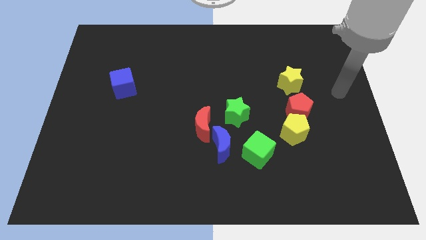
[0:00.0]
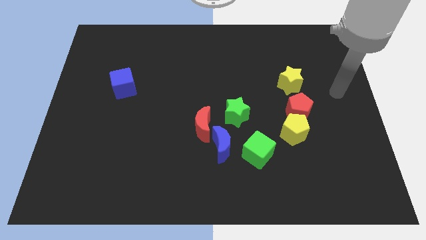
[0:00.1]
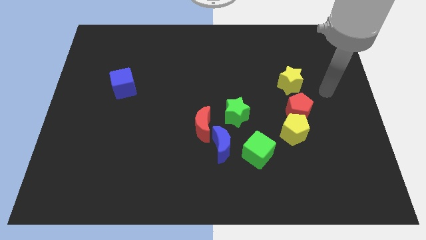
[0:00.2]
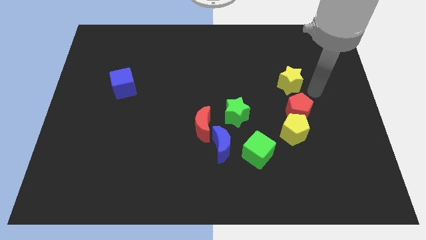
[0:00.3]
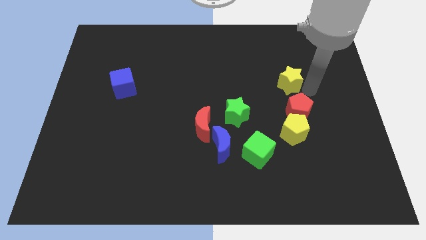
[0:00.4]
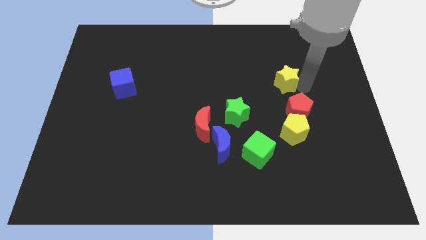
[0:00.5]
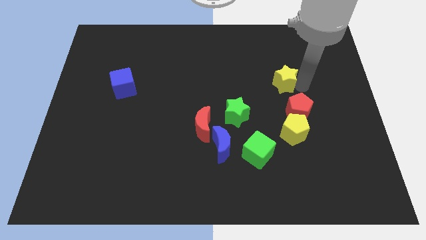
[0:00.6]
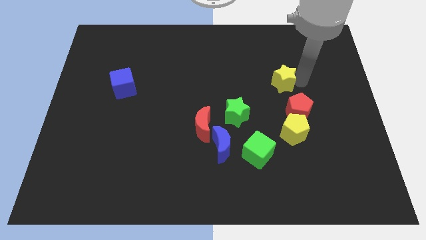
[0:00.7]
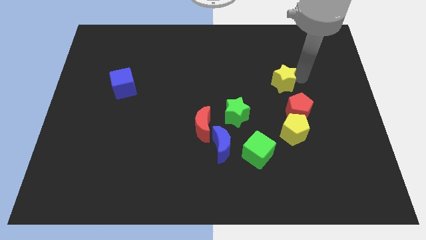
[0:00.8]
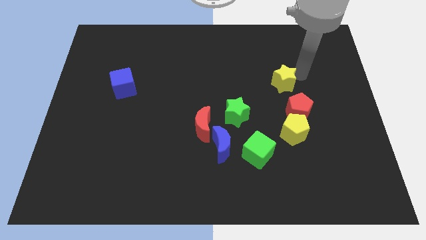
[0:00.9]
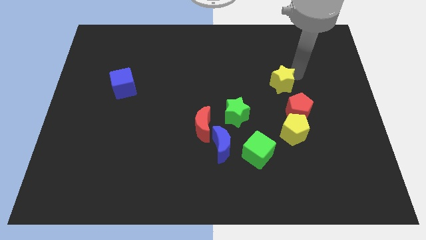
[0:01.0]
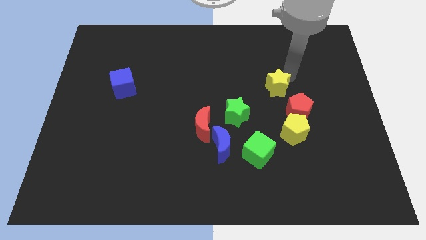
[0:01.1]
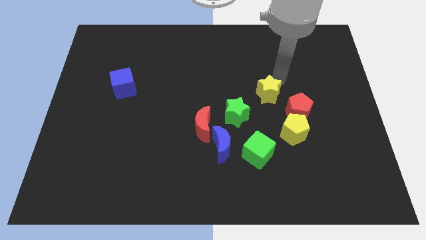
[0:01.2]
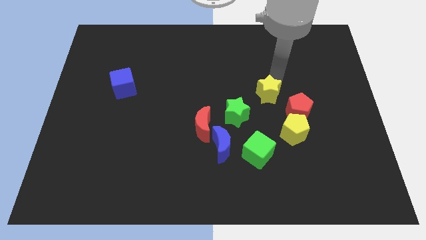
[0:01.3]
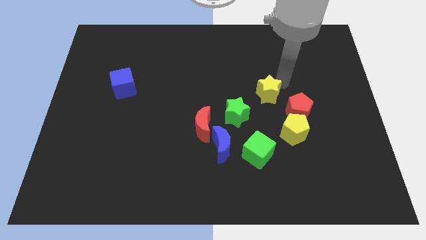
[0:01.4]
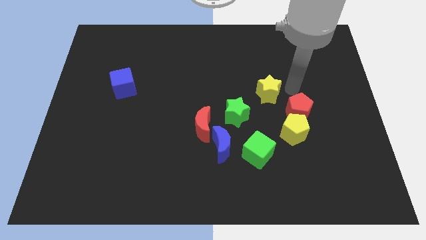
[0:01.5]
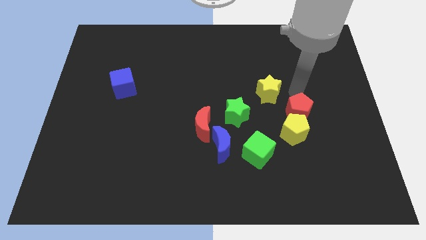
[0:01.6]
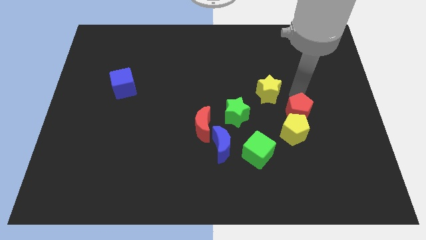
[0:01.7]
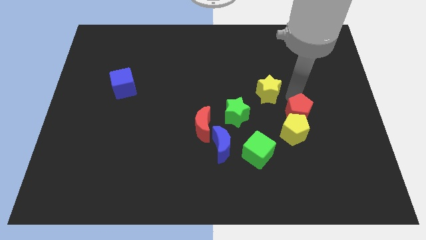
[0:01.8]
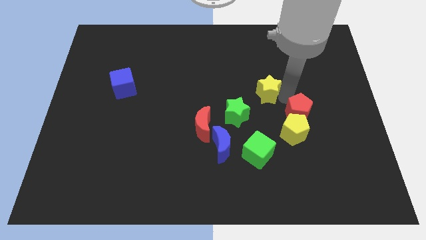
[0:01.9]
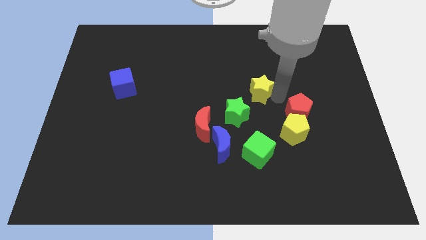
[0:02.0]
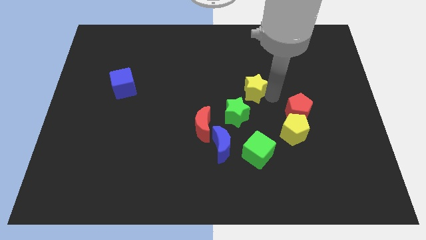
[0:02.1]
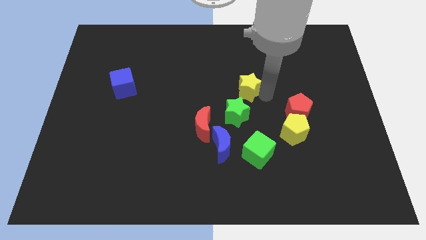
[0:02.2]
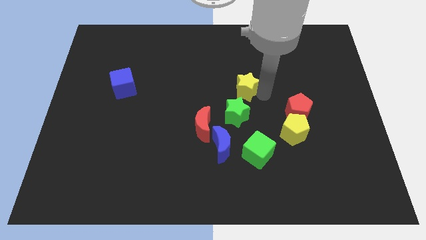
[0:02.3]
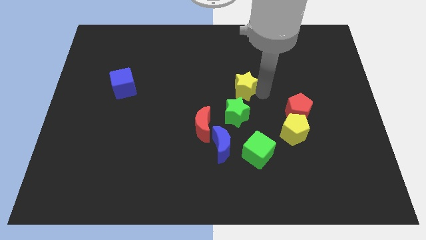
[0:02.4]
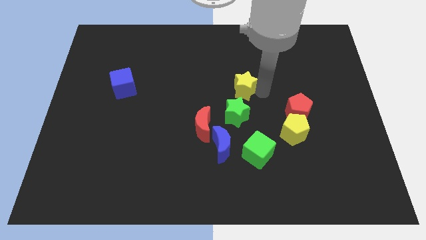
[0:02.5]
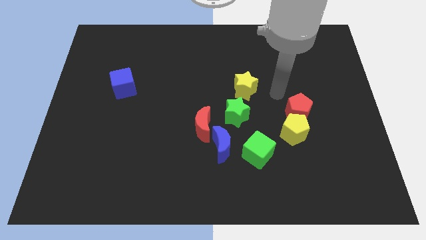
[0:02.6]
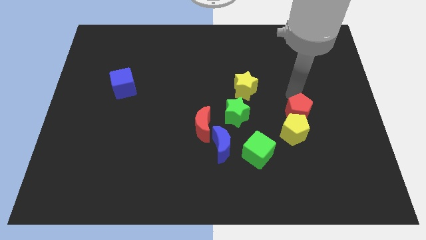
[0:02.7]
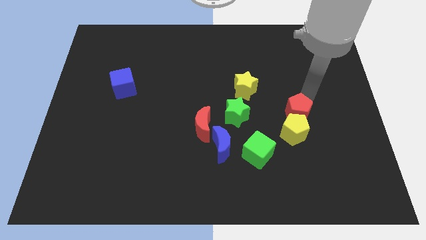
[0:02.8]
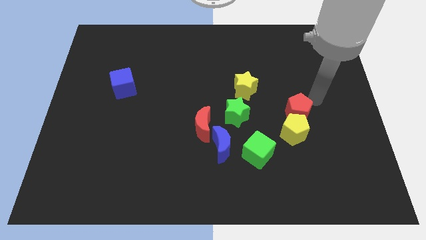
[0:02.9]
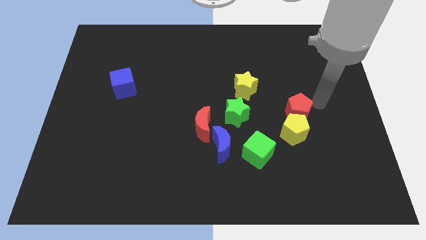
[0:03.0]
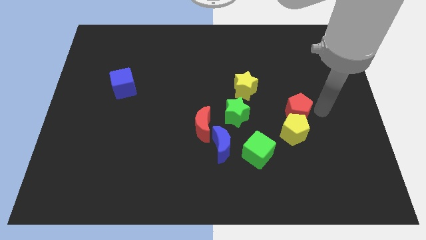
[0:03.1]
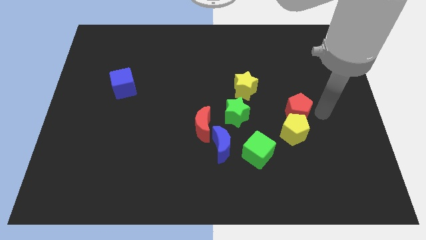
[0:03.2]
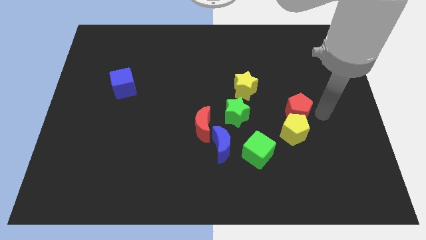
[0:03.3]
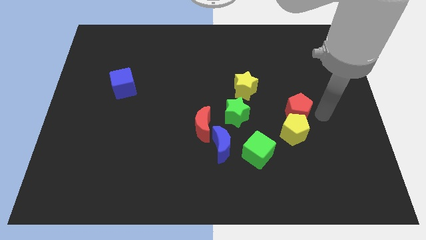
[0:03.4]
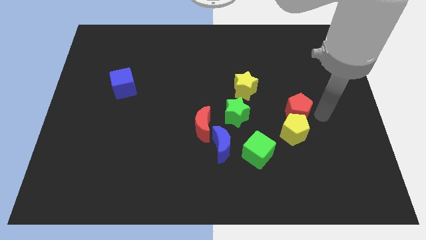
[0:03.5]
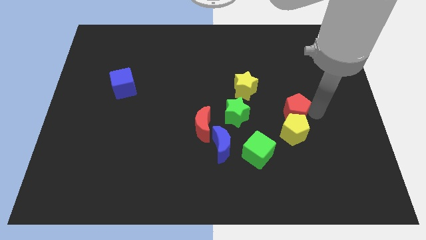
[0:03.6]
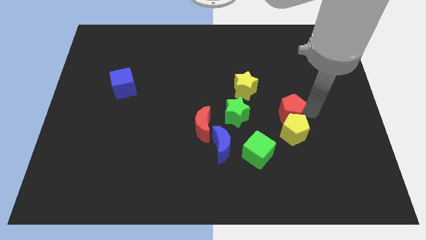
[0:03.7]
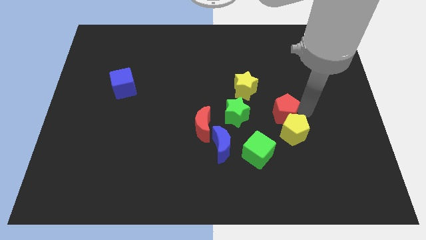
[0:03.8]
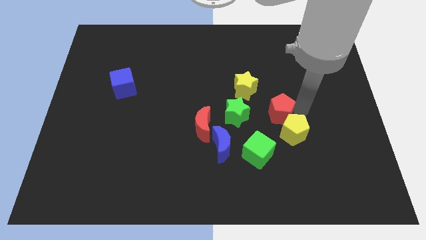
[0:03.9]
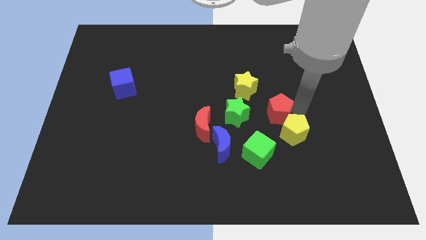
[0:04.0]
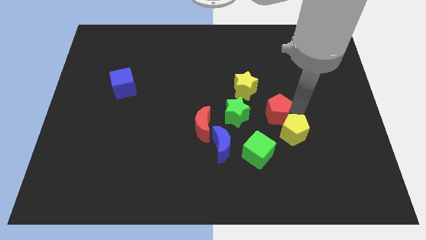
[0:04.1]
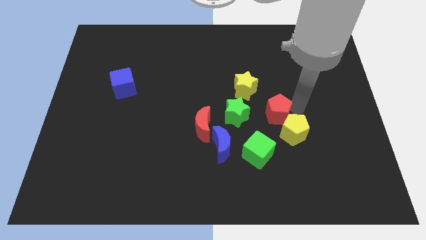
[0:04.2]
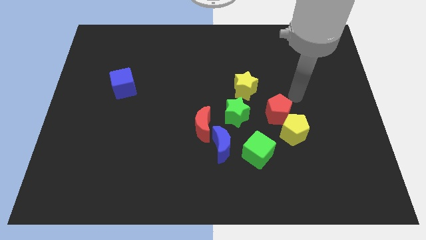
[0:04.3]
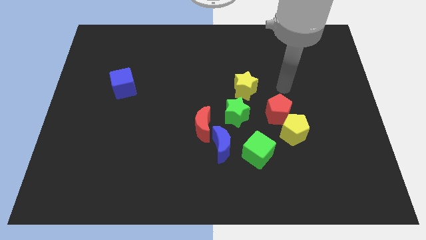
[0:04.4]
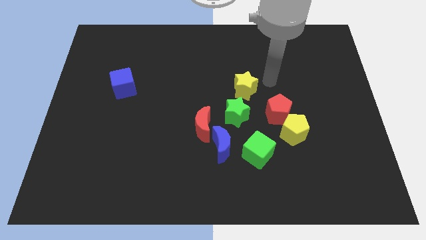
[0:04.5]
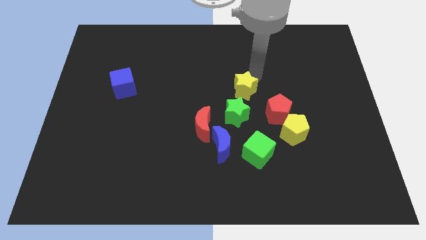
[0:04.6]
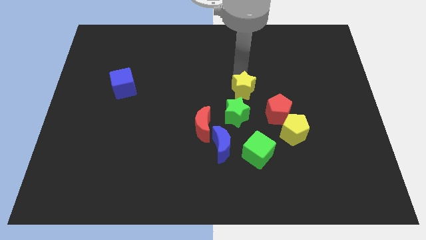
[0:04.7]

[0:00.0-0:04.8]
slightly move the red pentagon to the left of the board

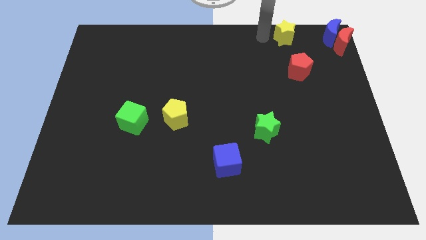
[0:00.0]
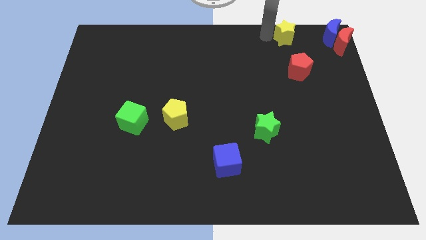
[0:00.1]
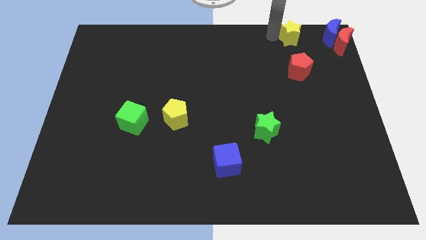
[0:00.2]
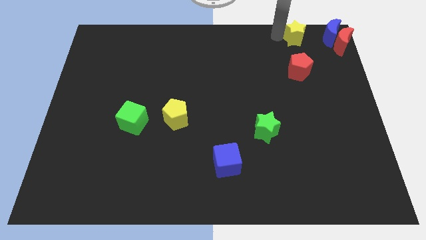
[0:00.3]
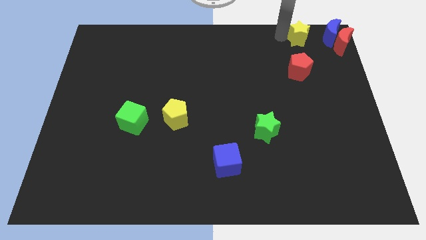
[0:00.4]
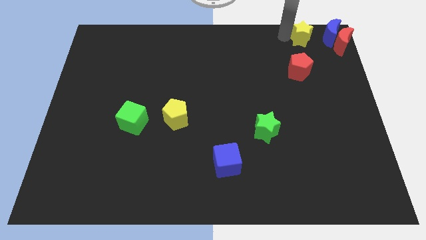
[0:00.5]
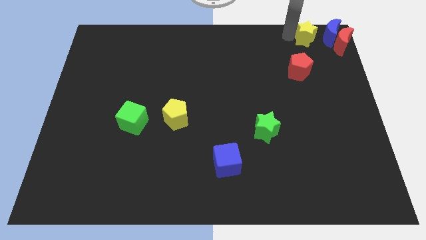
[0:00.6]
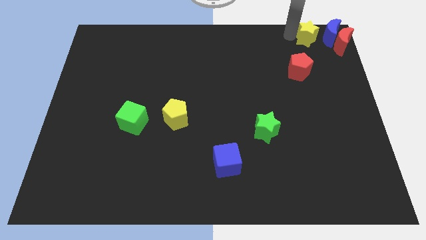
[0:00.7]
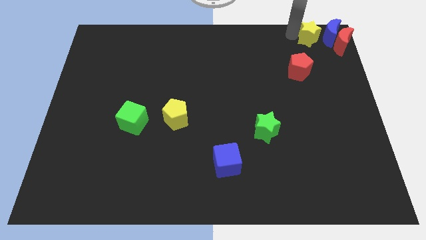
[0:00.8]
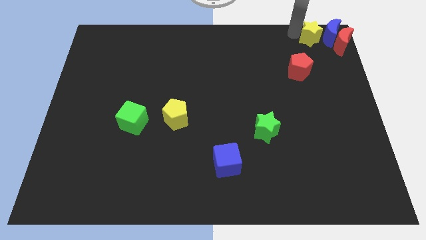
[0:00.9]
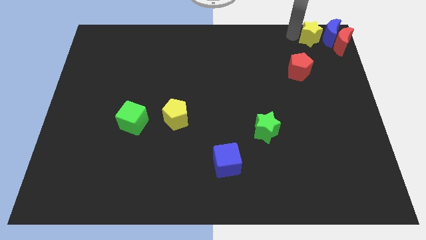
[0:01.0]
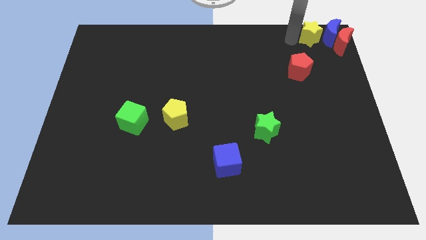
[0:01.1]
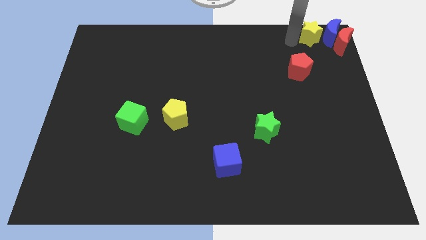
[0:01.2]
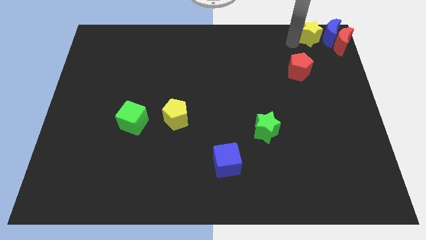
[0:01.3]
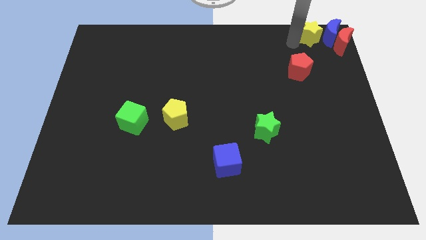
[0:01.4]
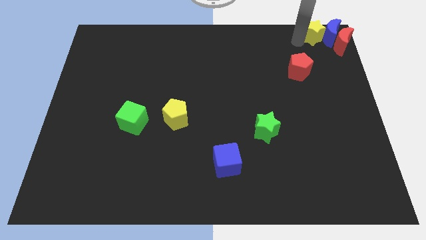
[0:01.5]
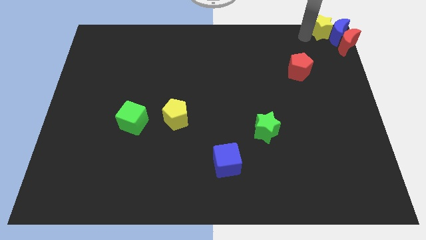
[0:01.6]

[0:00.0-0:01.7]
move yellow star into left of blue moon

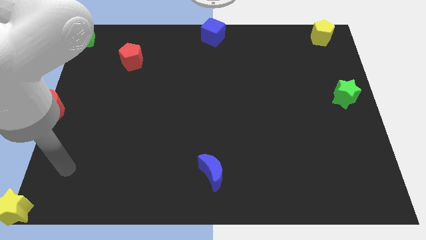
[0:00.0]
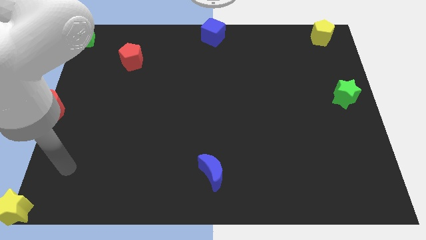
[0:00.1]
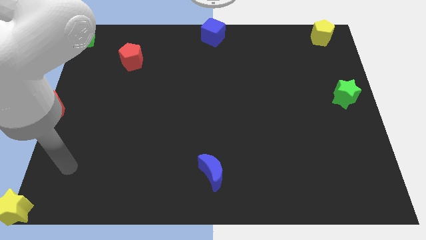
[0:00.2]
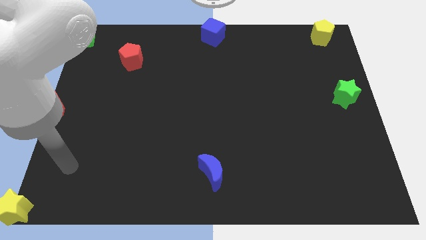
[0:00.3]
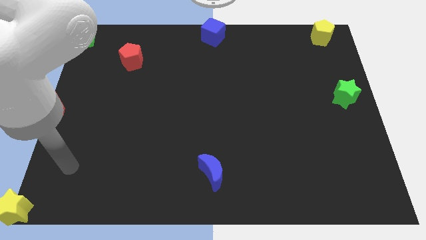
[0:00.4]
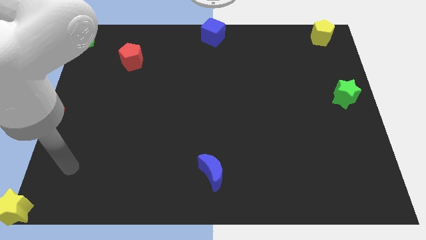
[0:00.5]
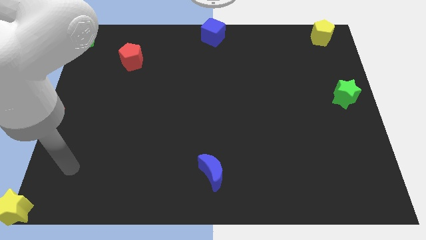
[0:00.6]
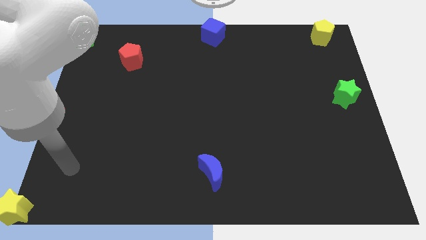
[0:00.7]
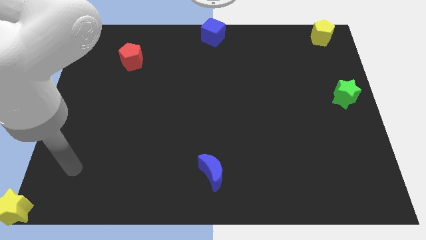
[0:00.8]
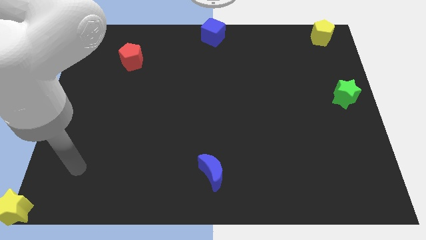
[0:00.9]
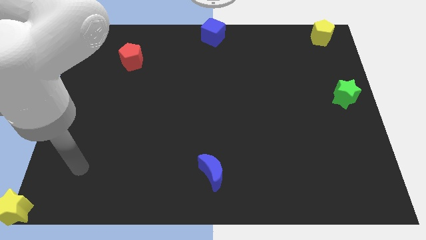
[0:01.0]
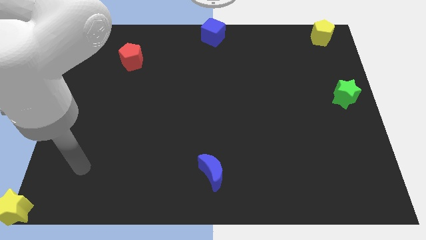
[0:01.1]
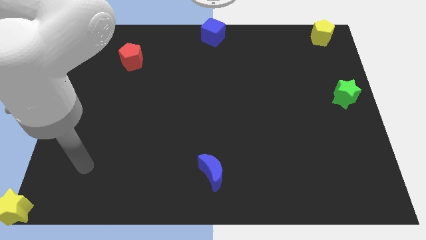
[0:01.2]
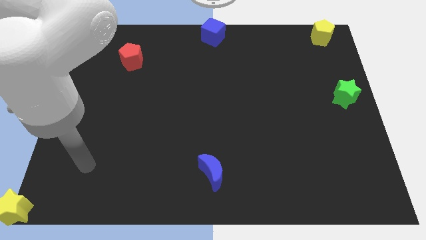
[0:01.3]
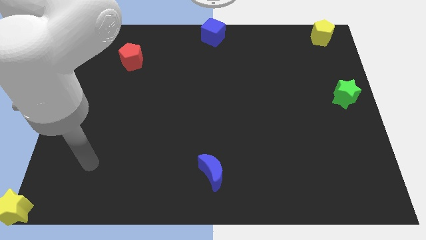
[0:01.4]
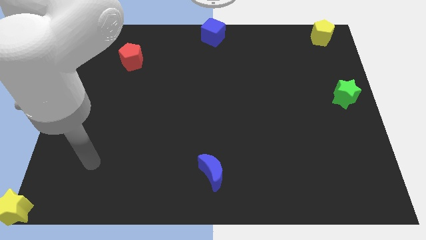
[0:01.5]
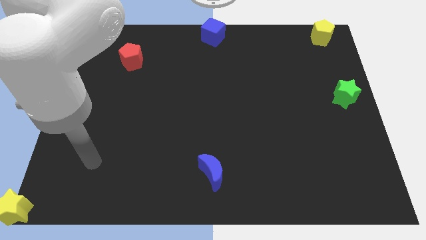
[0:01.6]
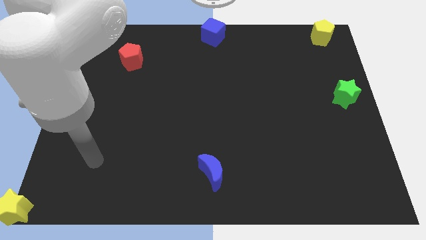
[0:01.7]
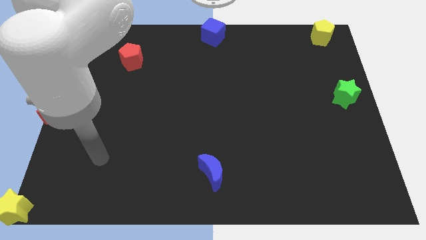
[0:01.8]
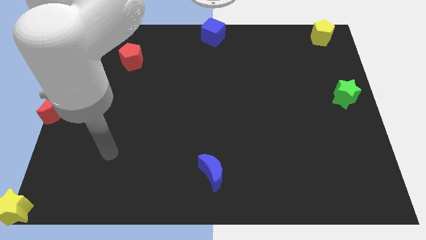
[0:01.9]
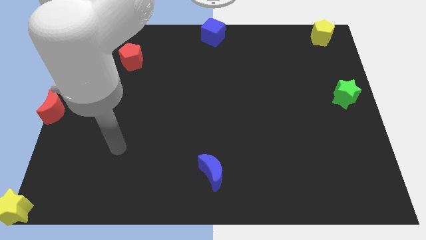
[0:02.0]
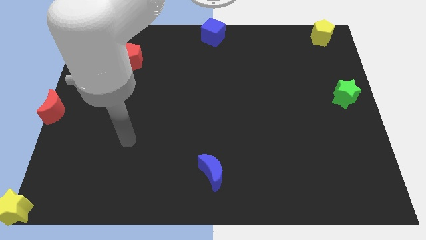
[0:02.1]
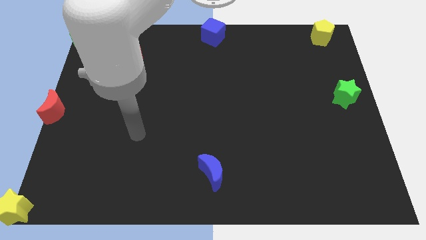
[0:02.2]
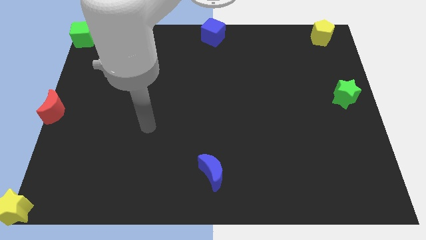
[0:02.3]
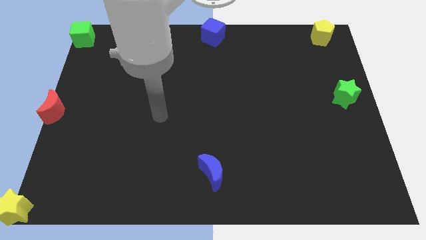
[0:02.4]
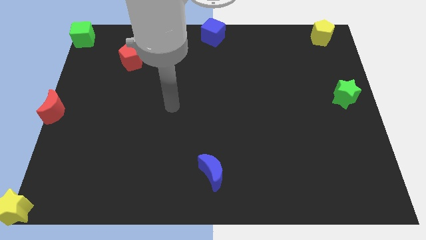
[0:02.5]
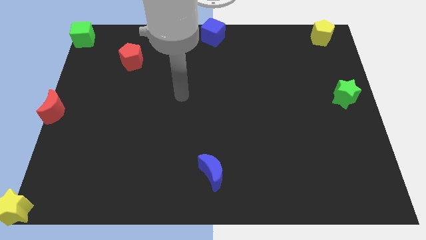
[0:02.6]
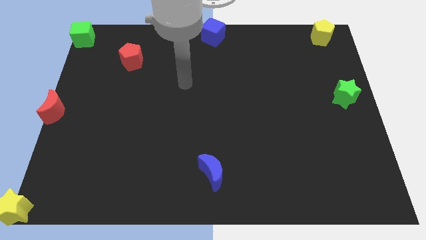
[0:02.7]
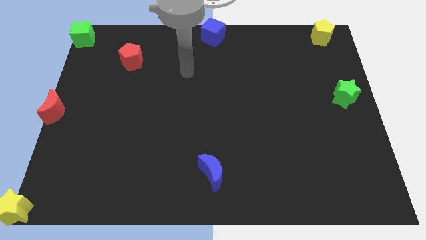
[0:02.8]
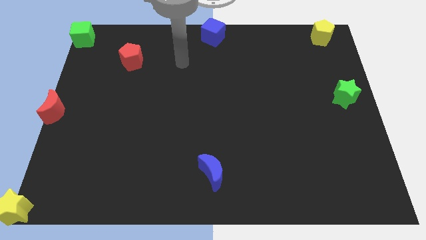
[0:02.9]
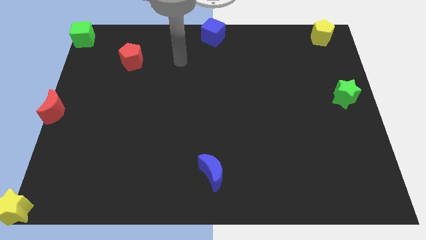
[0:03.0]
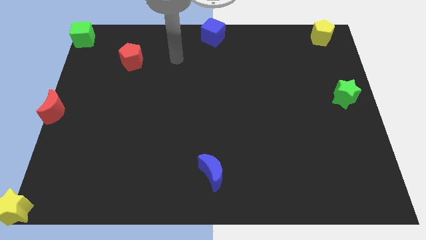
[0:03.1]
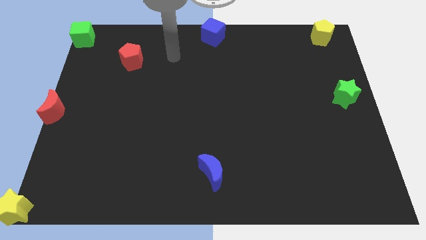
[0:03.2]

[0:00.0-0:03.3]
go and place your hand in between the red pentagon and the blue cube
